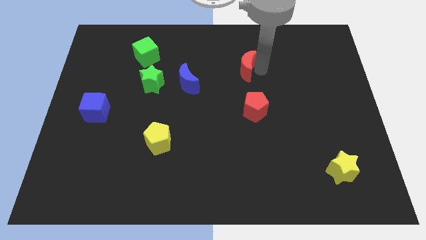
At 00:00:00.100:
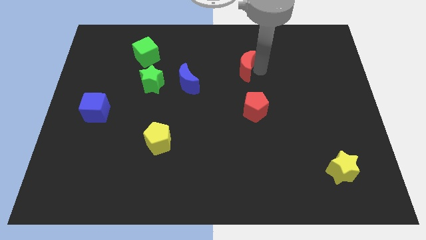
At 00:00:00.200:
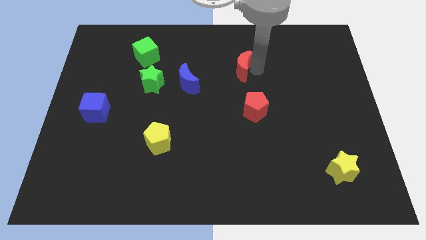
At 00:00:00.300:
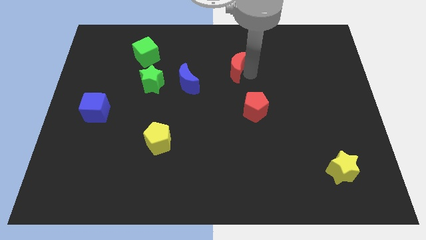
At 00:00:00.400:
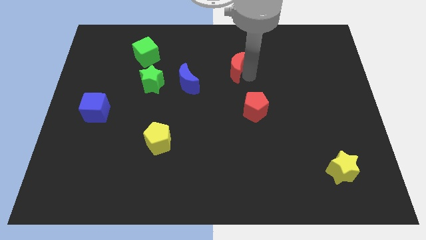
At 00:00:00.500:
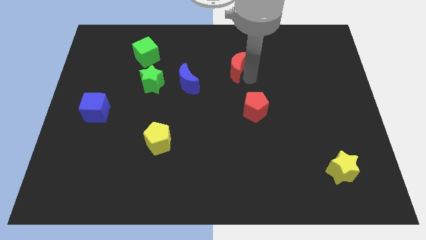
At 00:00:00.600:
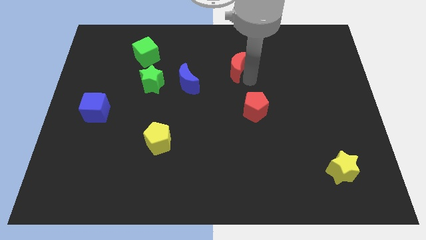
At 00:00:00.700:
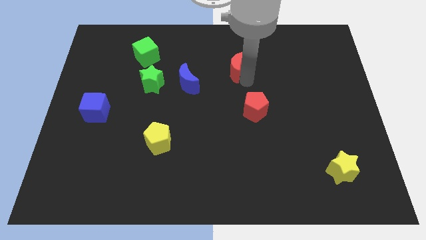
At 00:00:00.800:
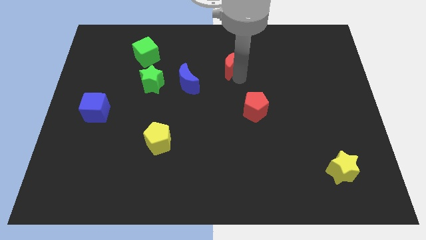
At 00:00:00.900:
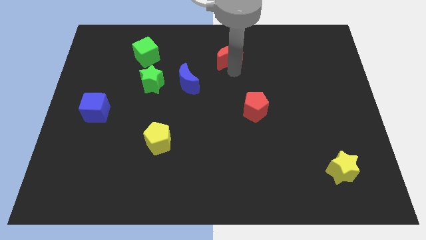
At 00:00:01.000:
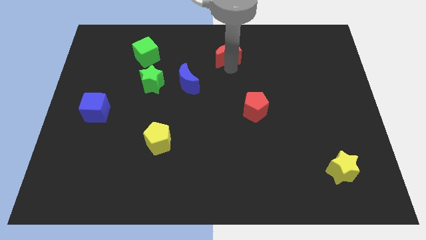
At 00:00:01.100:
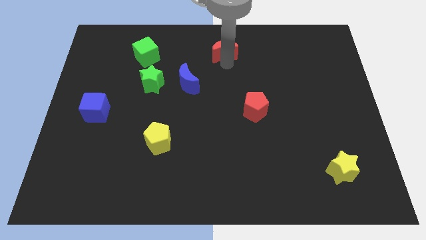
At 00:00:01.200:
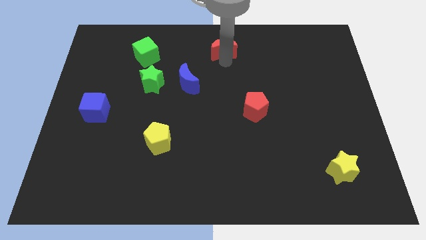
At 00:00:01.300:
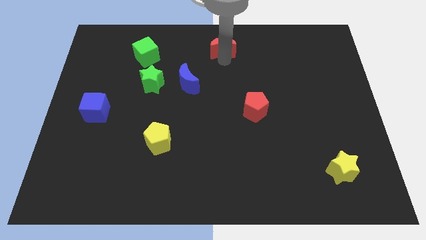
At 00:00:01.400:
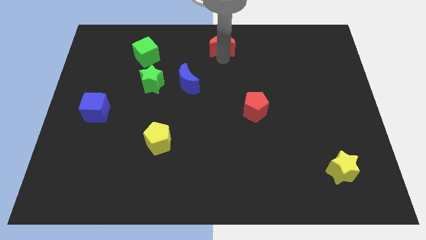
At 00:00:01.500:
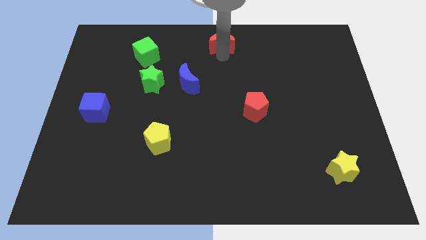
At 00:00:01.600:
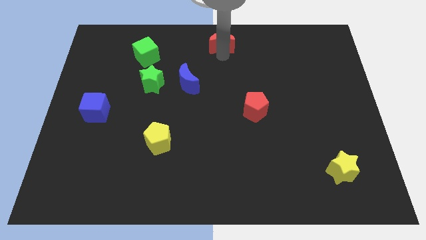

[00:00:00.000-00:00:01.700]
push red crescent to the top center

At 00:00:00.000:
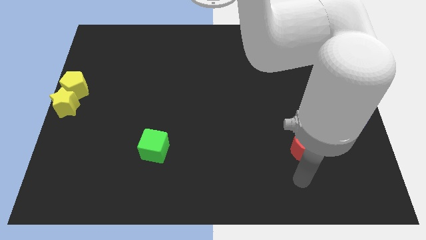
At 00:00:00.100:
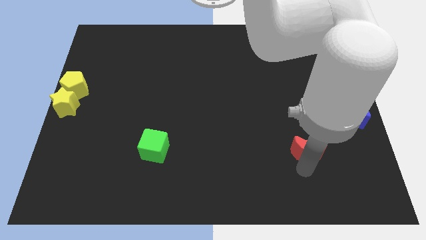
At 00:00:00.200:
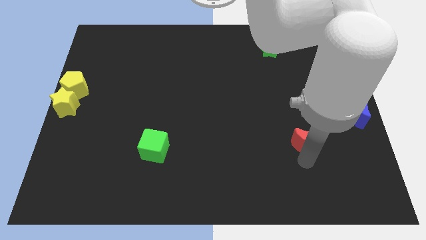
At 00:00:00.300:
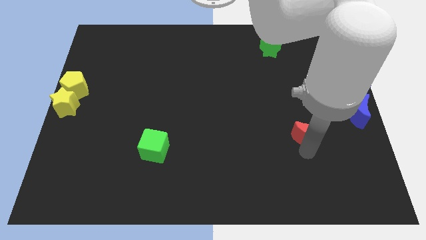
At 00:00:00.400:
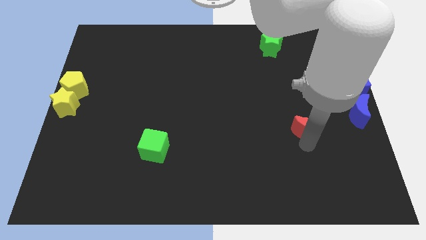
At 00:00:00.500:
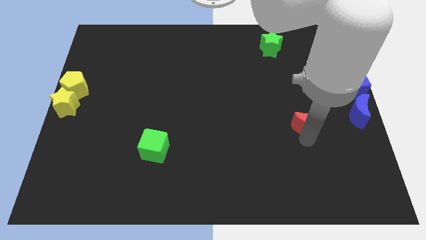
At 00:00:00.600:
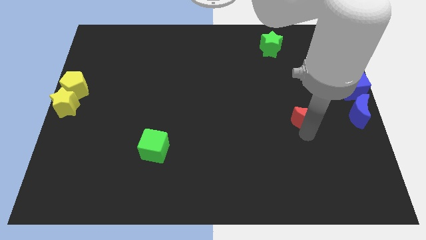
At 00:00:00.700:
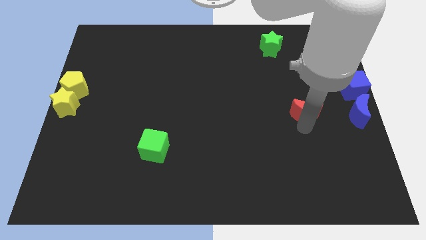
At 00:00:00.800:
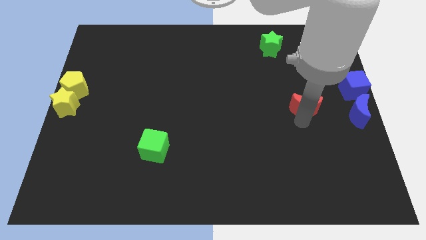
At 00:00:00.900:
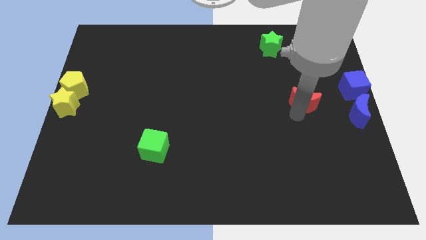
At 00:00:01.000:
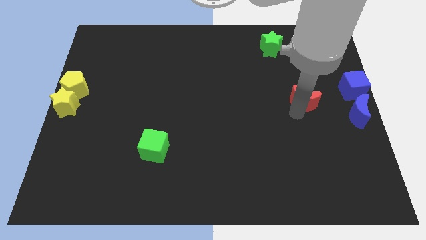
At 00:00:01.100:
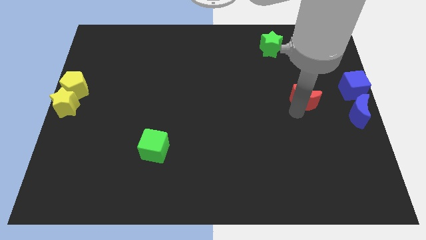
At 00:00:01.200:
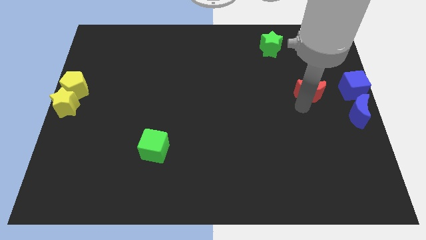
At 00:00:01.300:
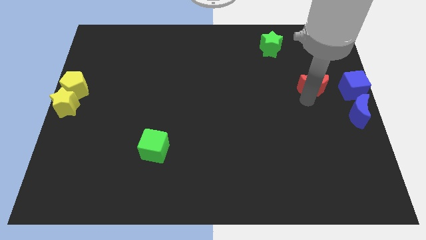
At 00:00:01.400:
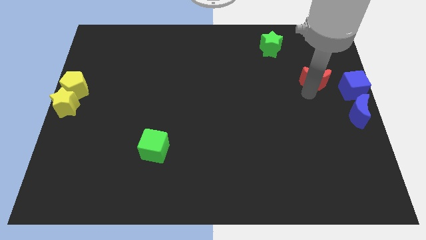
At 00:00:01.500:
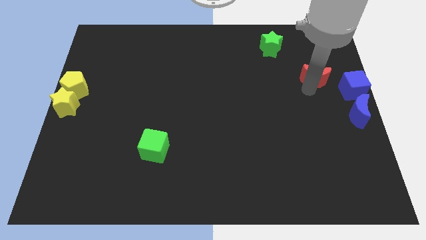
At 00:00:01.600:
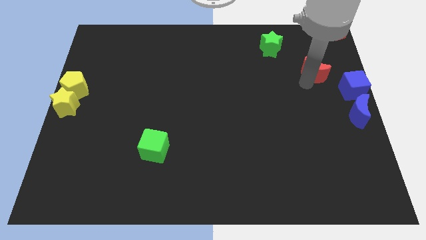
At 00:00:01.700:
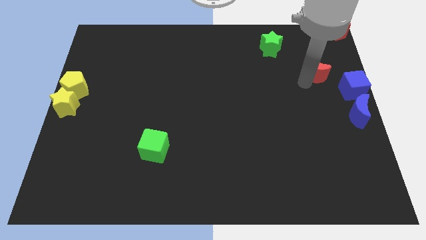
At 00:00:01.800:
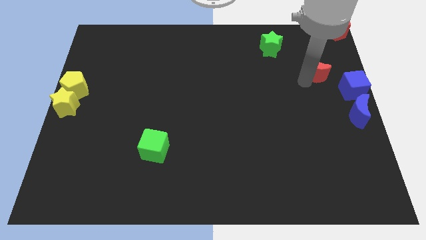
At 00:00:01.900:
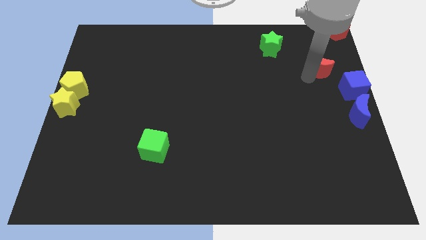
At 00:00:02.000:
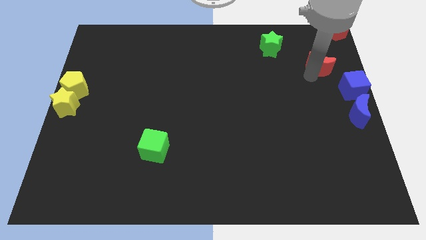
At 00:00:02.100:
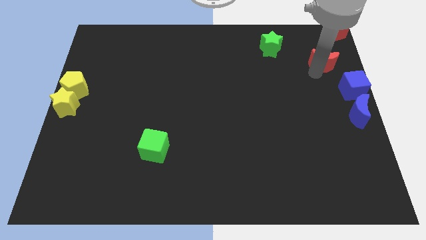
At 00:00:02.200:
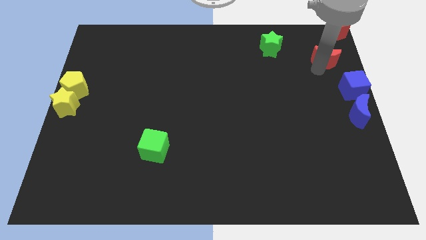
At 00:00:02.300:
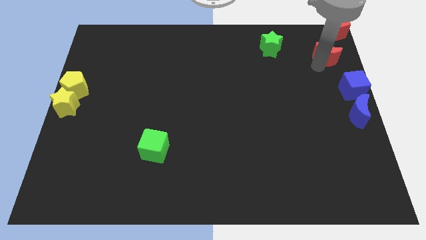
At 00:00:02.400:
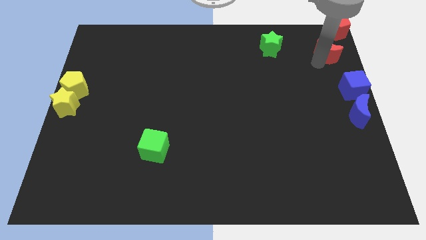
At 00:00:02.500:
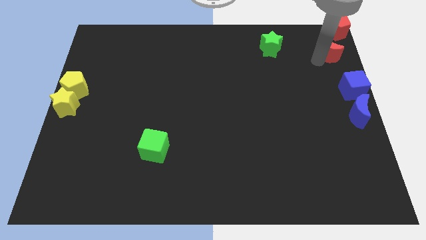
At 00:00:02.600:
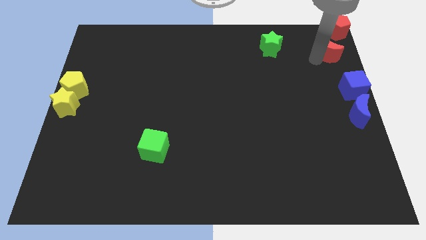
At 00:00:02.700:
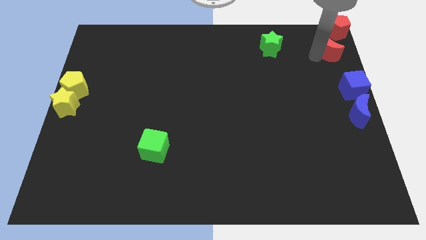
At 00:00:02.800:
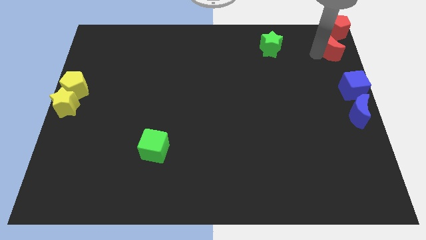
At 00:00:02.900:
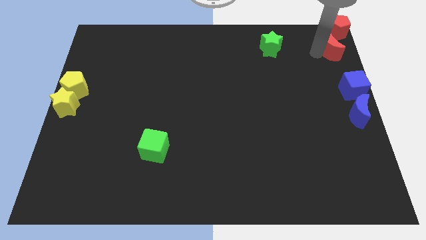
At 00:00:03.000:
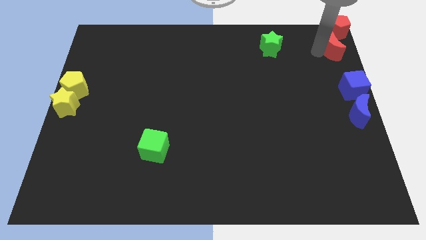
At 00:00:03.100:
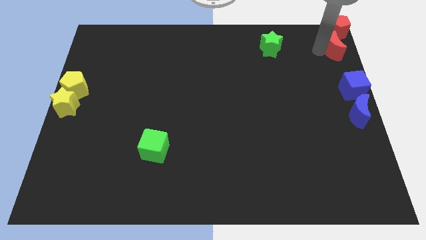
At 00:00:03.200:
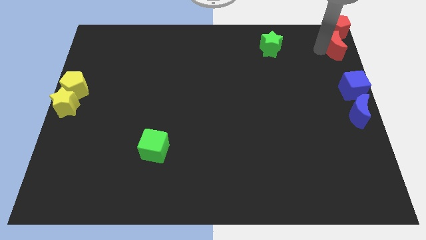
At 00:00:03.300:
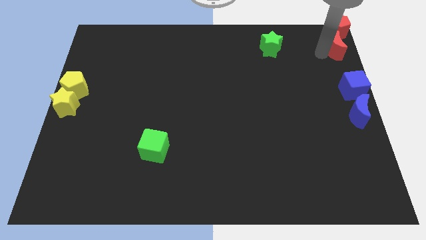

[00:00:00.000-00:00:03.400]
move the red crescent below the red pentagon

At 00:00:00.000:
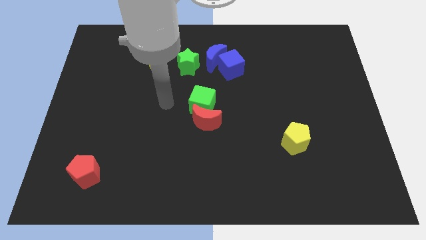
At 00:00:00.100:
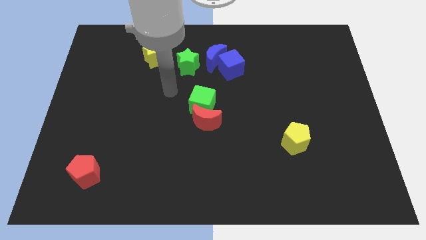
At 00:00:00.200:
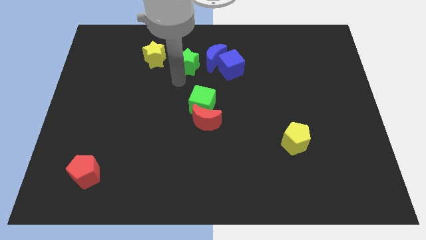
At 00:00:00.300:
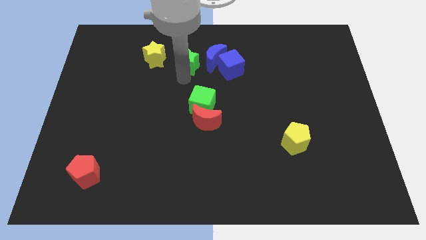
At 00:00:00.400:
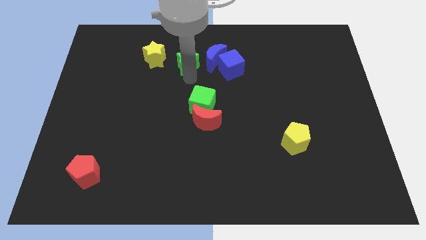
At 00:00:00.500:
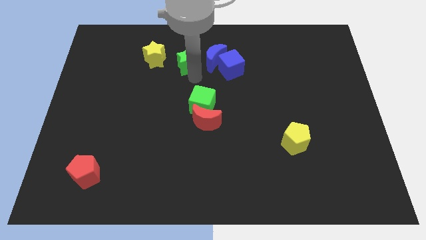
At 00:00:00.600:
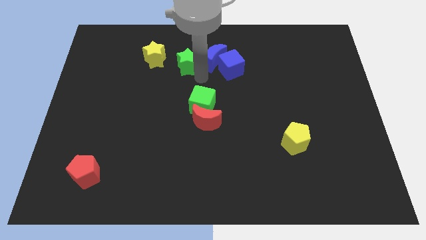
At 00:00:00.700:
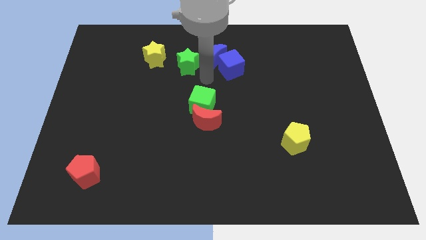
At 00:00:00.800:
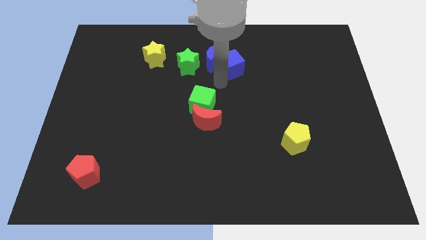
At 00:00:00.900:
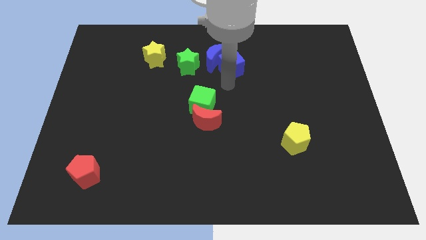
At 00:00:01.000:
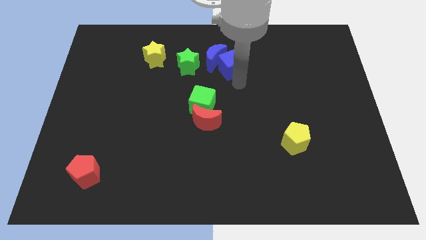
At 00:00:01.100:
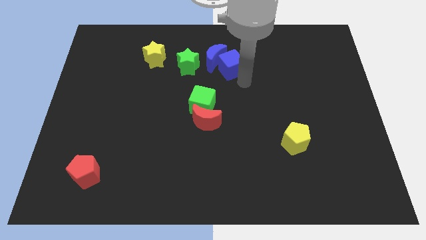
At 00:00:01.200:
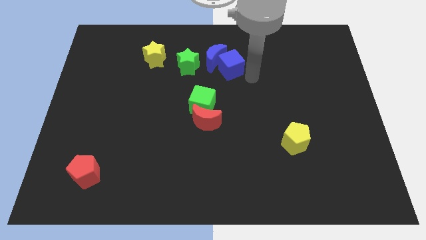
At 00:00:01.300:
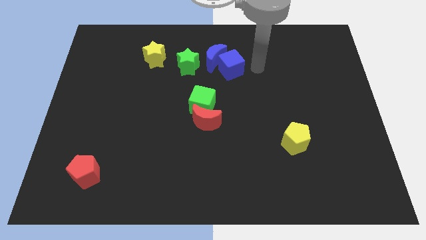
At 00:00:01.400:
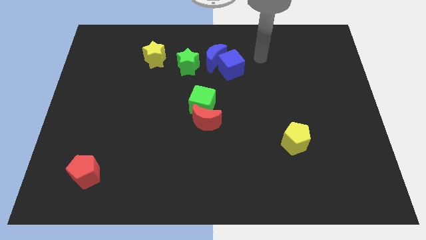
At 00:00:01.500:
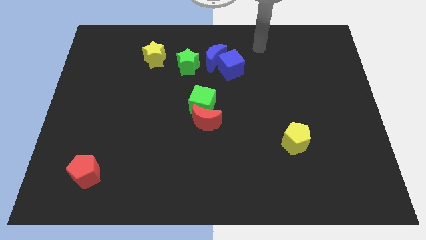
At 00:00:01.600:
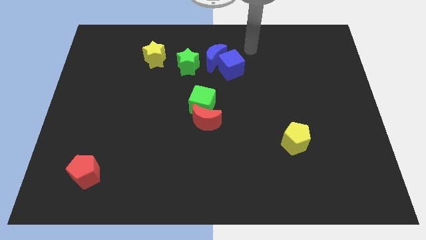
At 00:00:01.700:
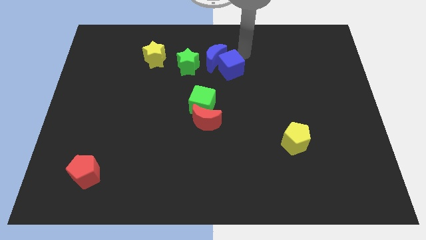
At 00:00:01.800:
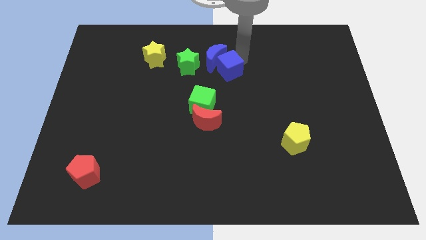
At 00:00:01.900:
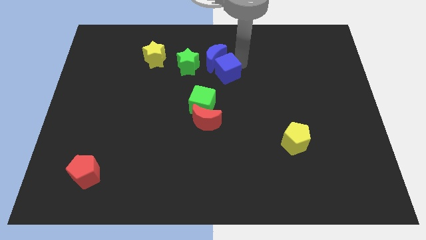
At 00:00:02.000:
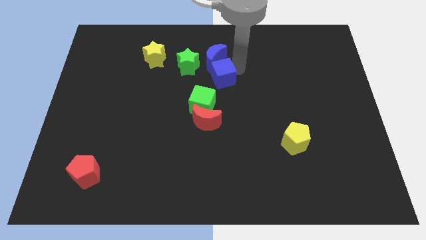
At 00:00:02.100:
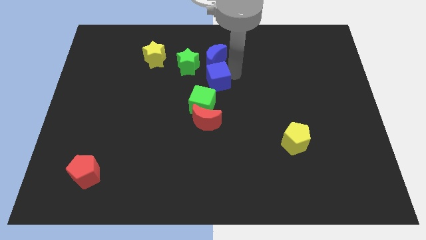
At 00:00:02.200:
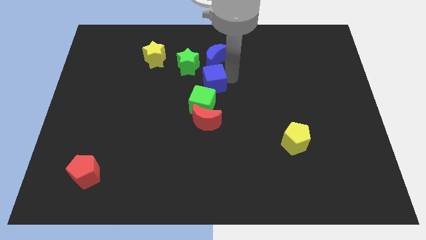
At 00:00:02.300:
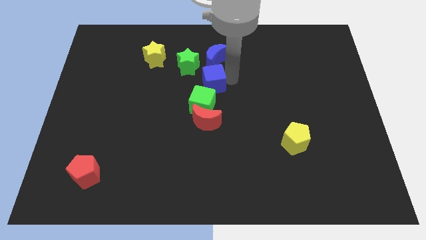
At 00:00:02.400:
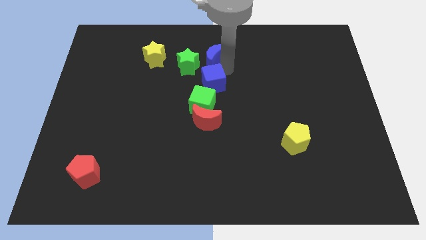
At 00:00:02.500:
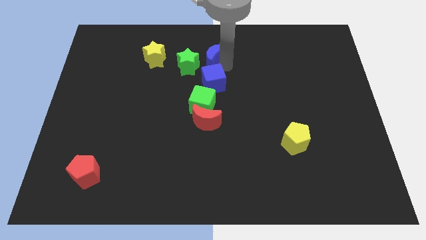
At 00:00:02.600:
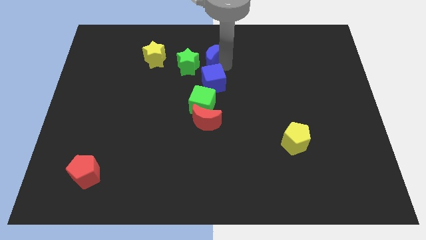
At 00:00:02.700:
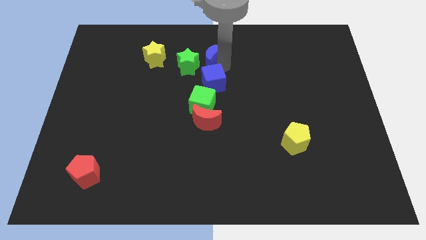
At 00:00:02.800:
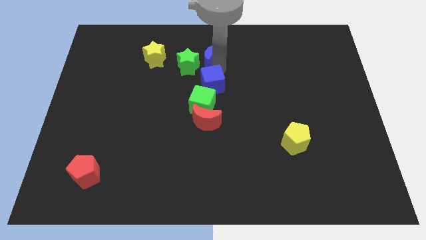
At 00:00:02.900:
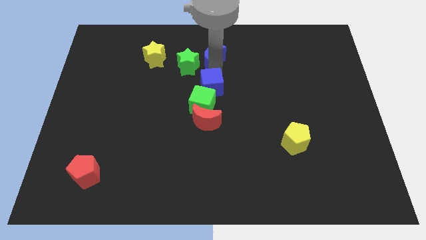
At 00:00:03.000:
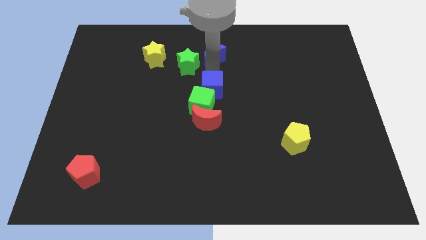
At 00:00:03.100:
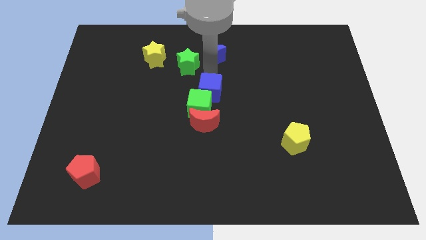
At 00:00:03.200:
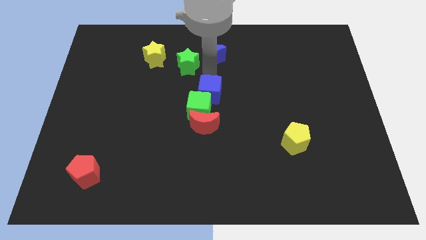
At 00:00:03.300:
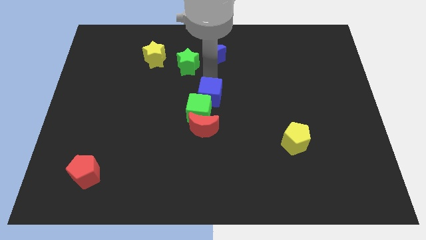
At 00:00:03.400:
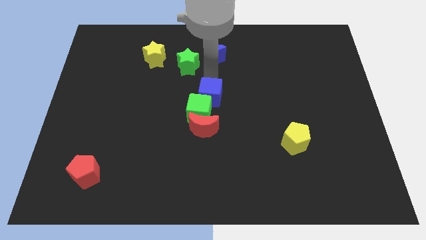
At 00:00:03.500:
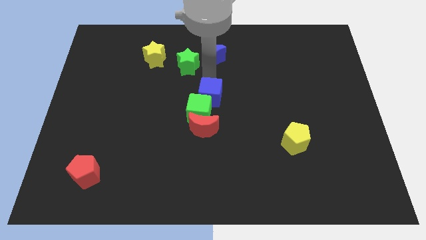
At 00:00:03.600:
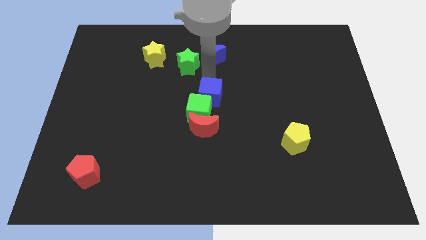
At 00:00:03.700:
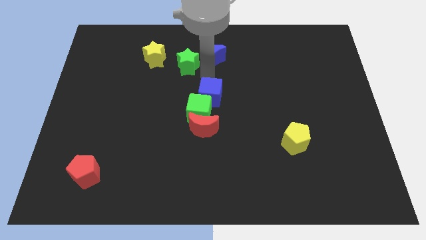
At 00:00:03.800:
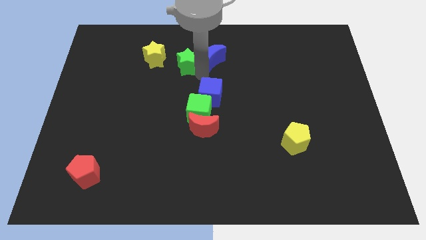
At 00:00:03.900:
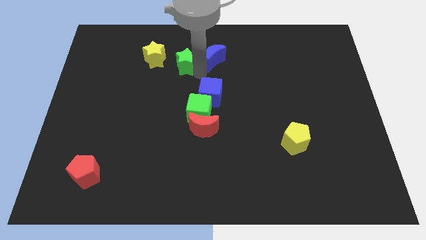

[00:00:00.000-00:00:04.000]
push the blue cube into the green cube
